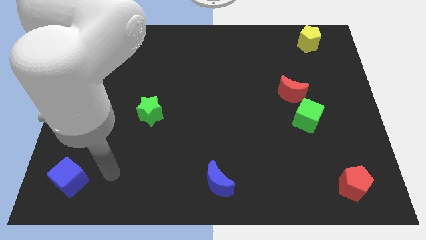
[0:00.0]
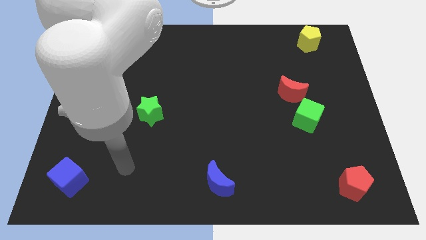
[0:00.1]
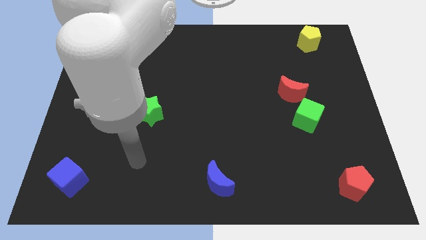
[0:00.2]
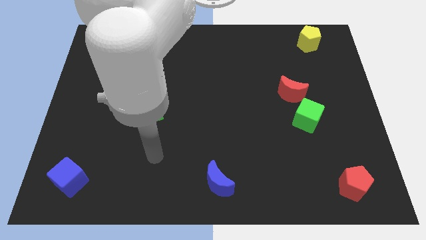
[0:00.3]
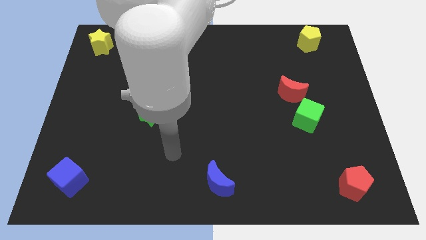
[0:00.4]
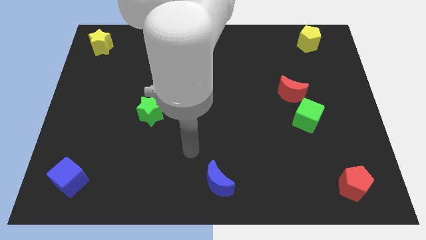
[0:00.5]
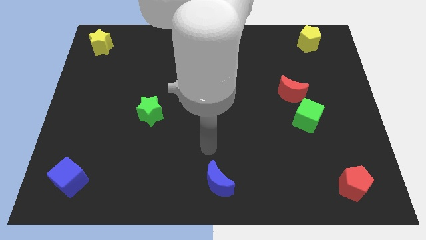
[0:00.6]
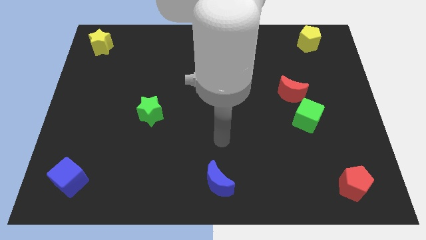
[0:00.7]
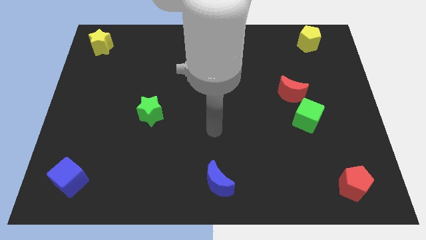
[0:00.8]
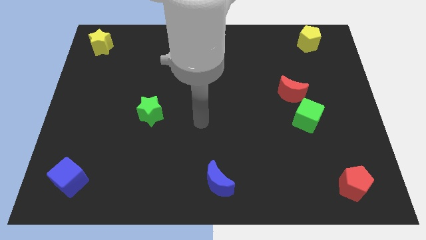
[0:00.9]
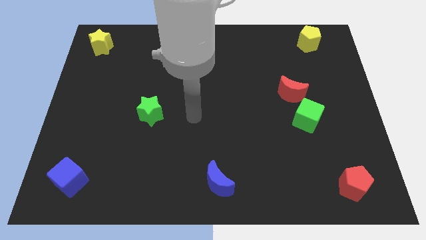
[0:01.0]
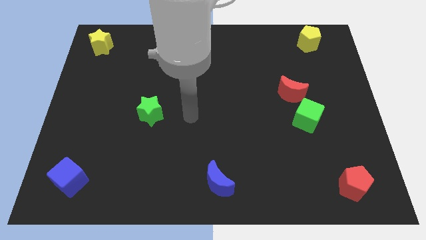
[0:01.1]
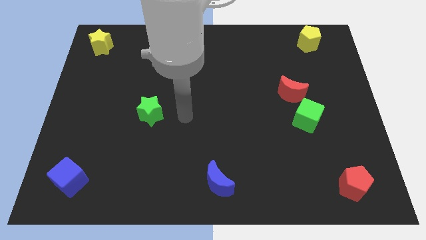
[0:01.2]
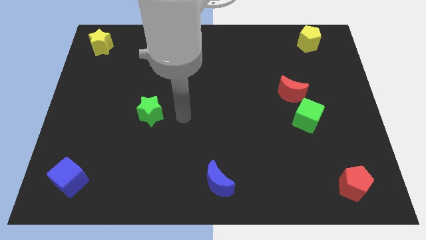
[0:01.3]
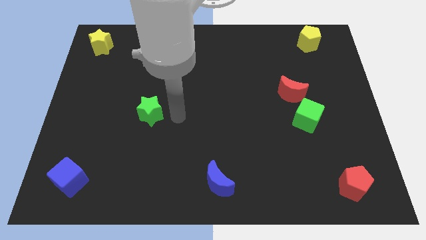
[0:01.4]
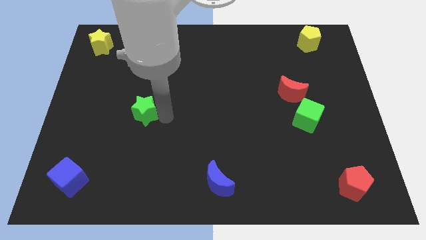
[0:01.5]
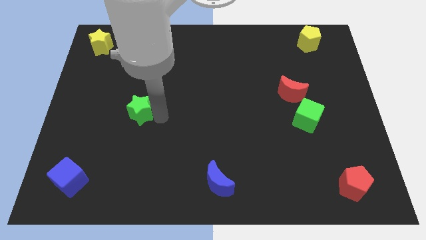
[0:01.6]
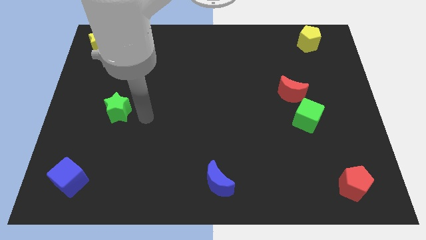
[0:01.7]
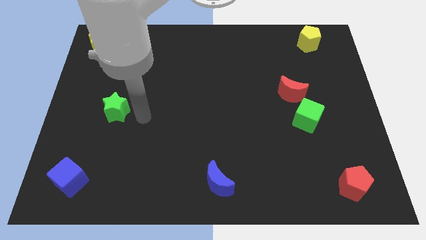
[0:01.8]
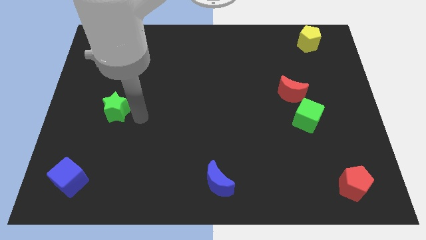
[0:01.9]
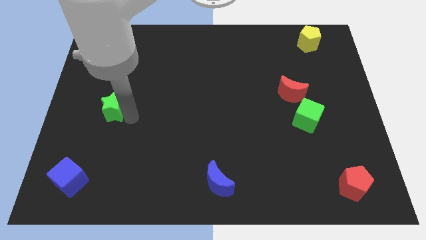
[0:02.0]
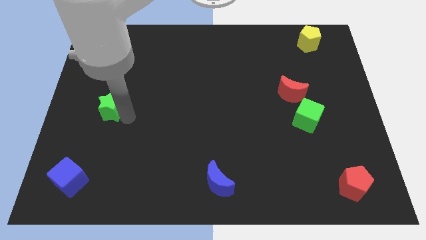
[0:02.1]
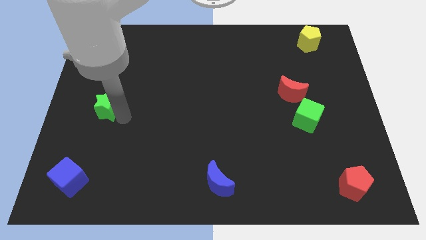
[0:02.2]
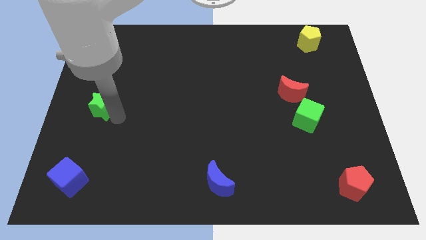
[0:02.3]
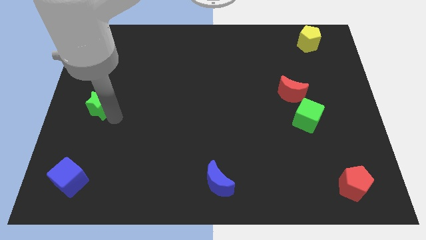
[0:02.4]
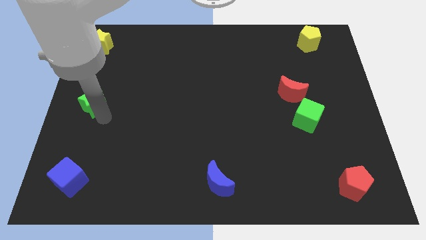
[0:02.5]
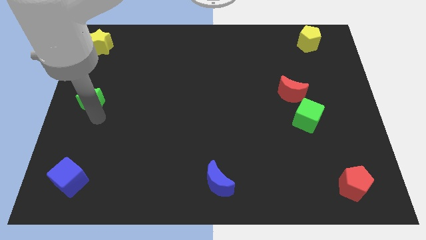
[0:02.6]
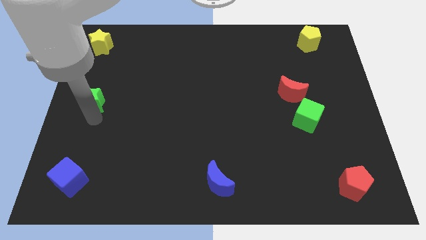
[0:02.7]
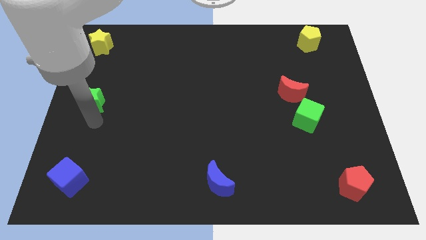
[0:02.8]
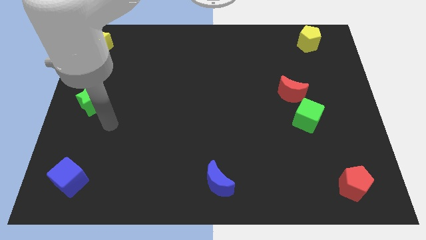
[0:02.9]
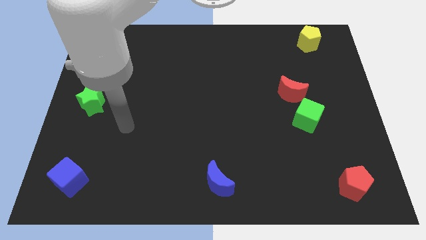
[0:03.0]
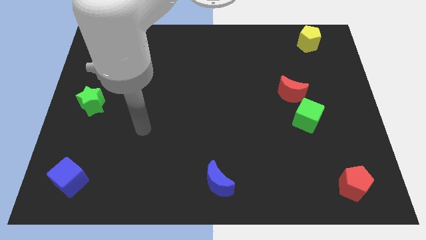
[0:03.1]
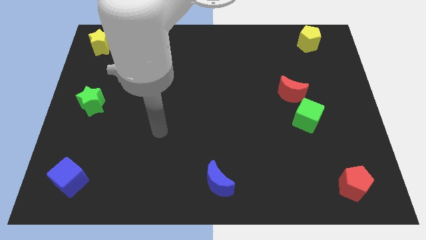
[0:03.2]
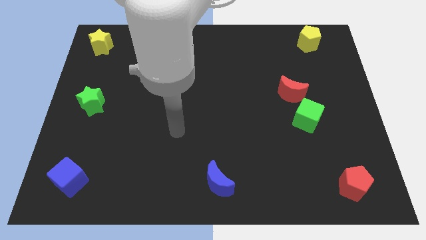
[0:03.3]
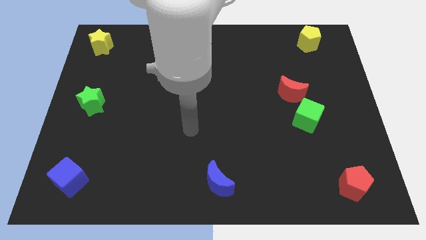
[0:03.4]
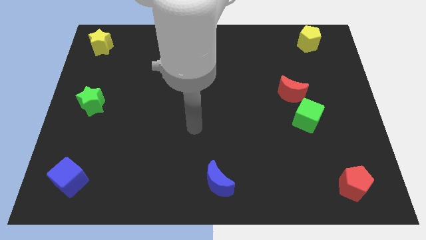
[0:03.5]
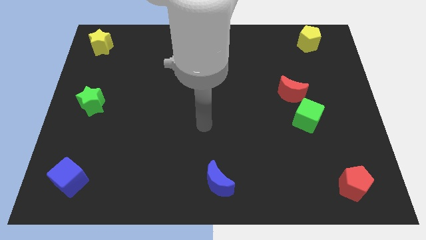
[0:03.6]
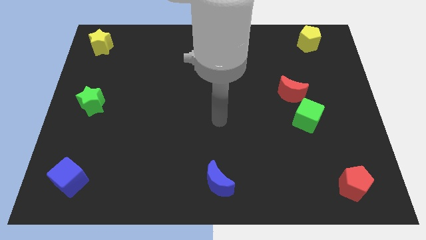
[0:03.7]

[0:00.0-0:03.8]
place the green star in between the blue cube and the yellow star to form a vertical line

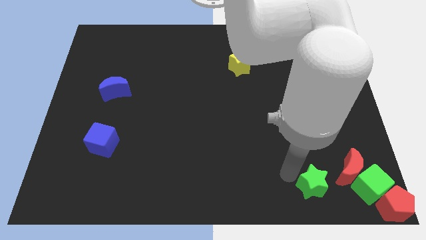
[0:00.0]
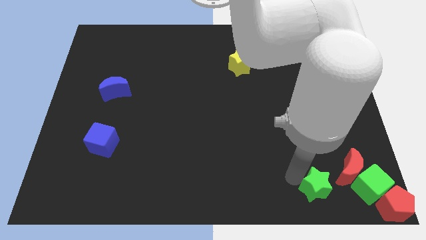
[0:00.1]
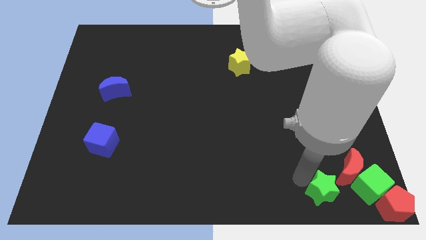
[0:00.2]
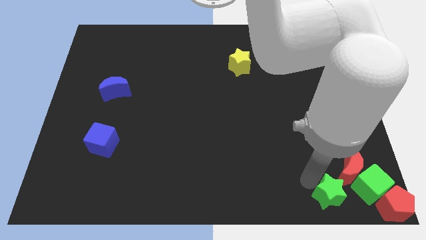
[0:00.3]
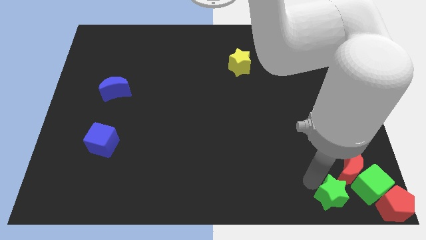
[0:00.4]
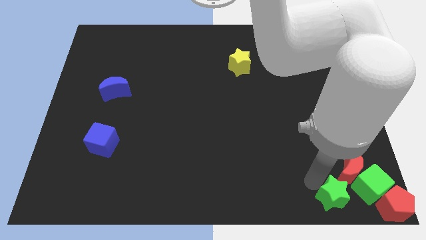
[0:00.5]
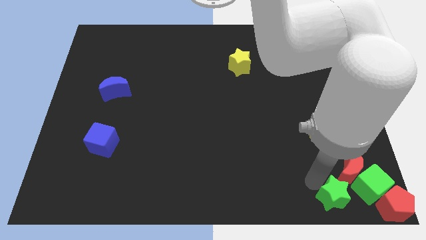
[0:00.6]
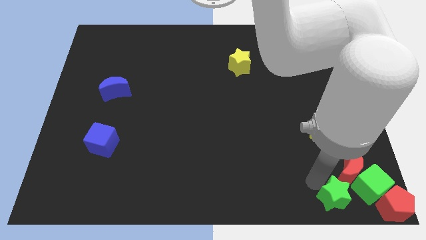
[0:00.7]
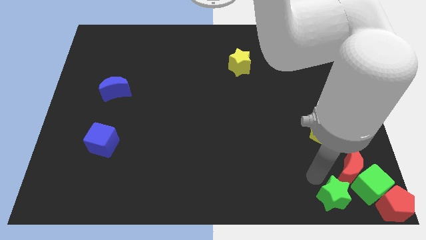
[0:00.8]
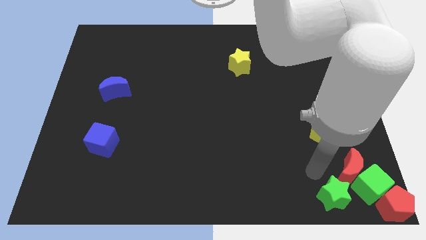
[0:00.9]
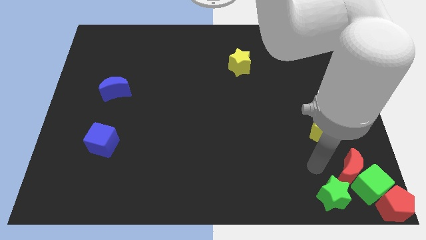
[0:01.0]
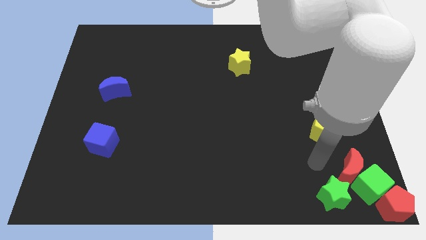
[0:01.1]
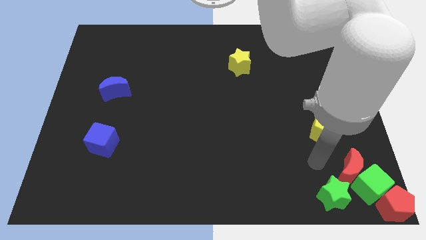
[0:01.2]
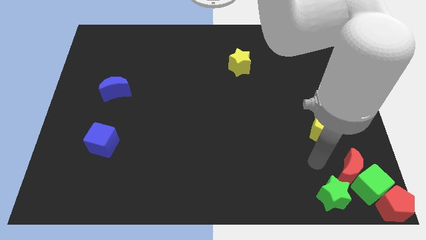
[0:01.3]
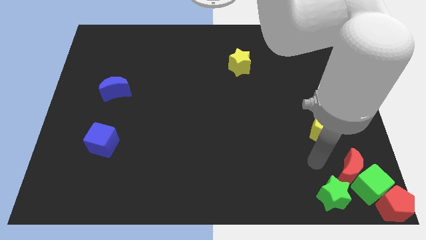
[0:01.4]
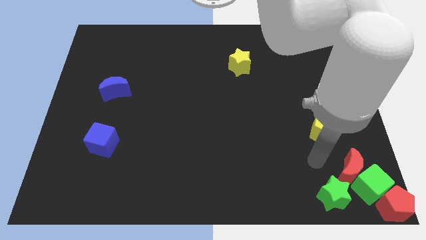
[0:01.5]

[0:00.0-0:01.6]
push the green star to the left of the green cube

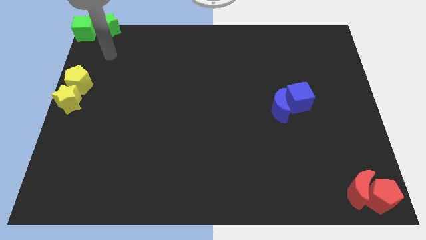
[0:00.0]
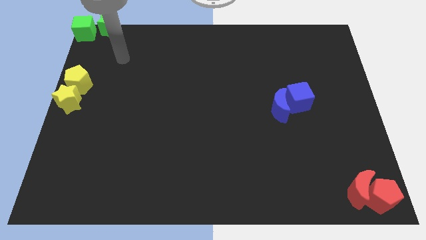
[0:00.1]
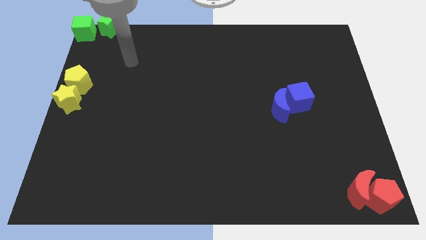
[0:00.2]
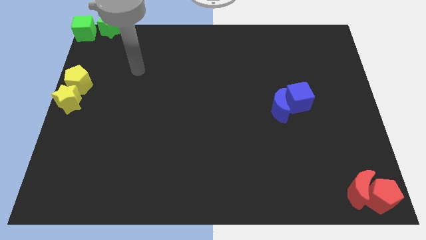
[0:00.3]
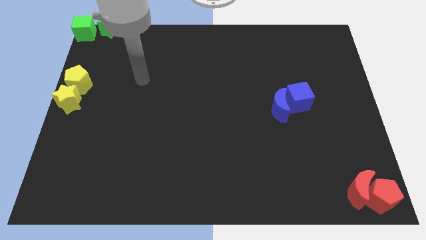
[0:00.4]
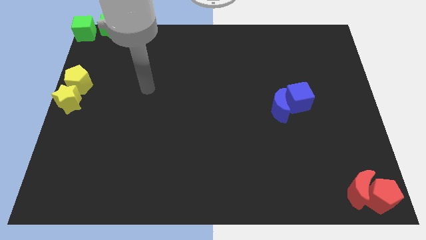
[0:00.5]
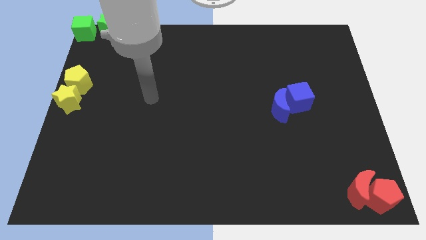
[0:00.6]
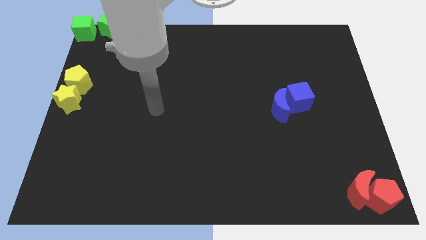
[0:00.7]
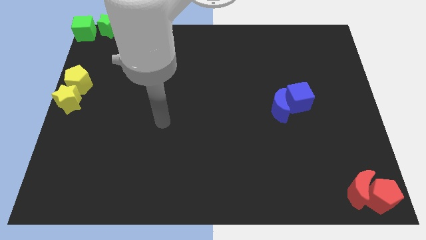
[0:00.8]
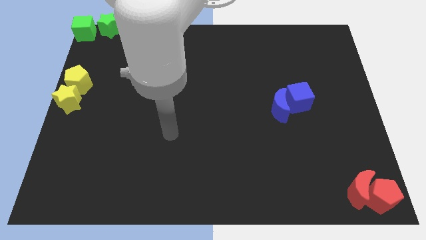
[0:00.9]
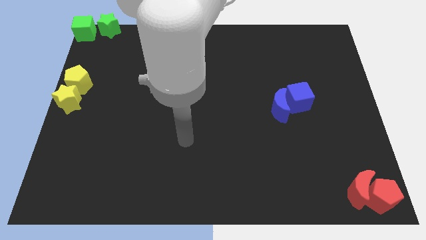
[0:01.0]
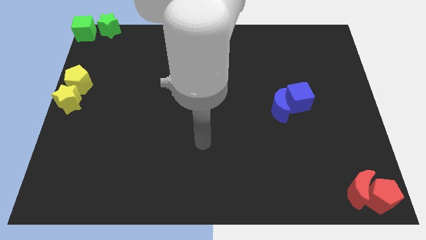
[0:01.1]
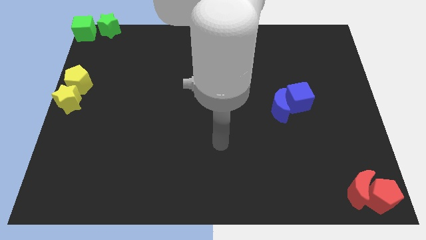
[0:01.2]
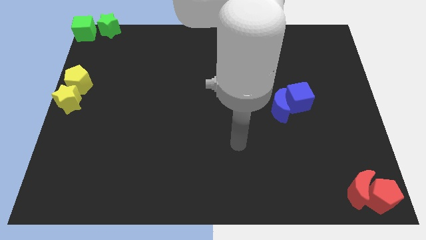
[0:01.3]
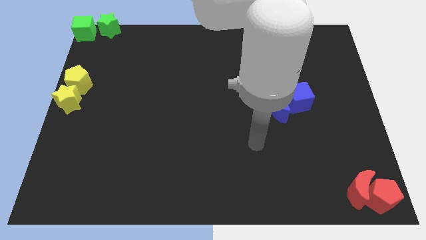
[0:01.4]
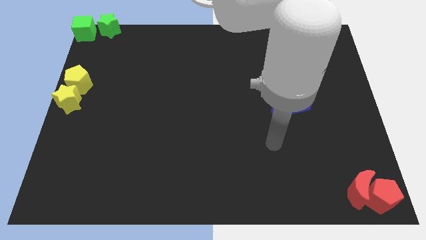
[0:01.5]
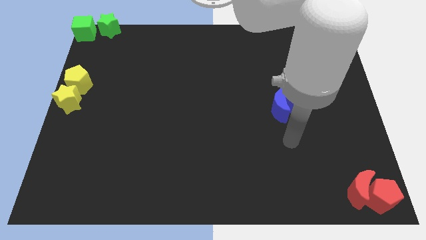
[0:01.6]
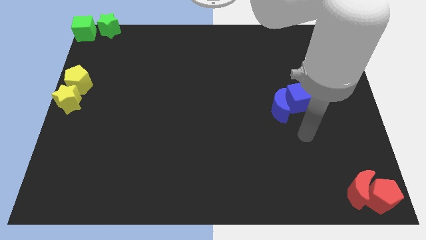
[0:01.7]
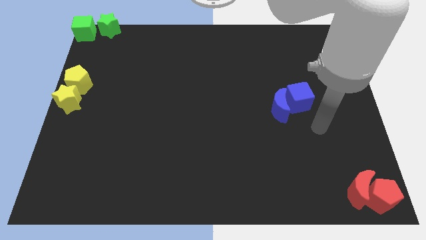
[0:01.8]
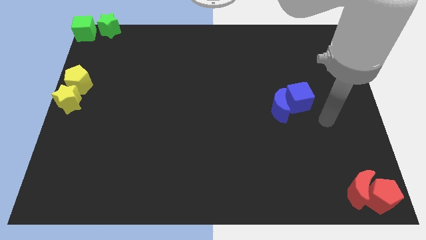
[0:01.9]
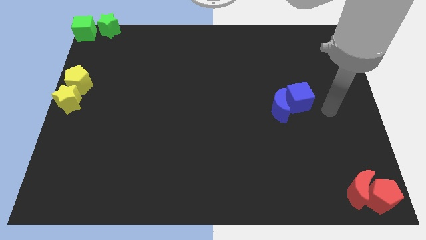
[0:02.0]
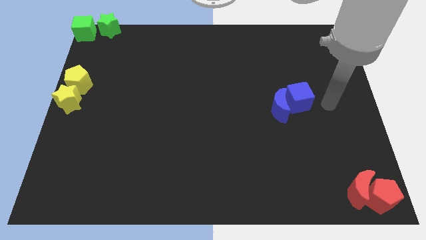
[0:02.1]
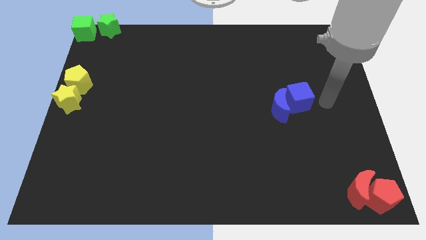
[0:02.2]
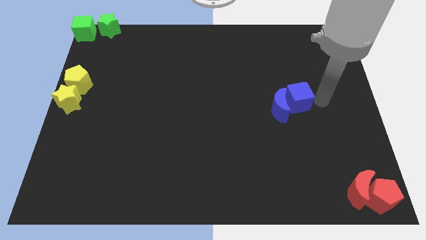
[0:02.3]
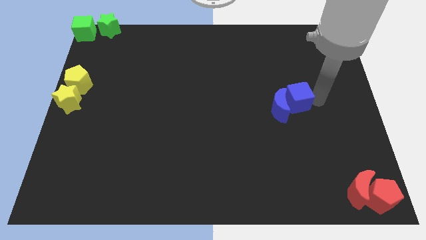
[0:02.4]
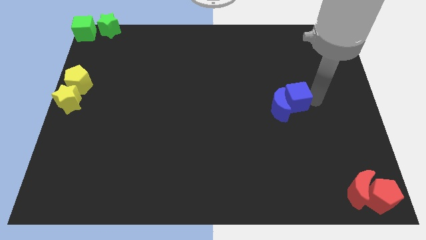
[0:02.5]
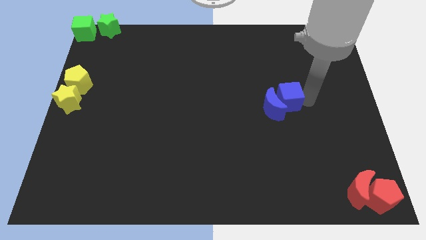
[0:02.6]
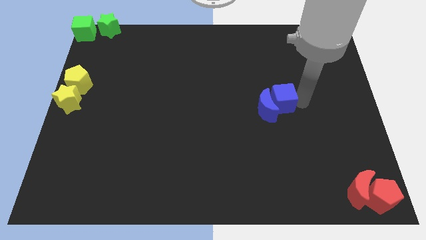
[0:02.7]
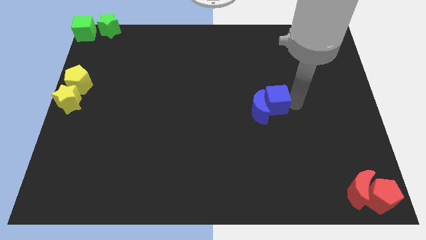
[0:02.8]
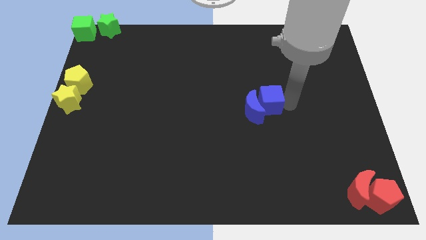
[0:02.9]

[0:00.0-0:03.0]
go and push the group of blue blocks slightly towards the center of the board

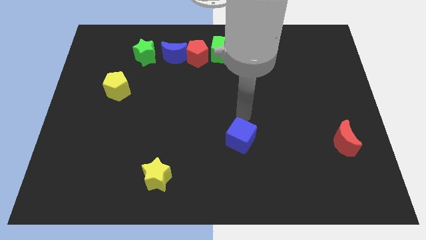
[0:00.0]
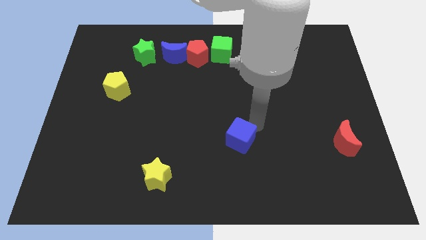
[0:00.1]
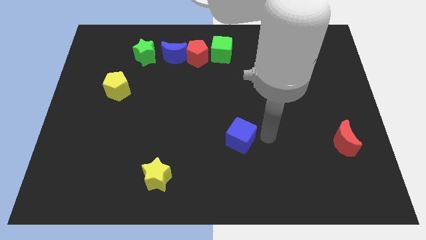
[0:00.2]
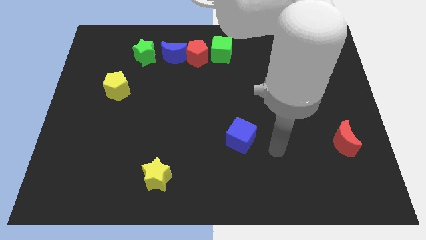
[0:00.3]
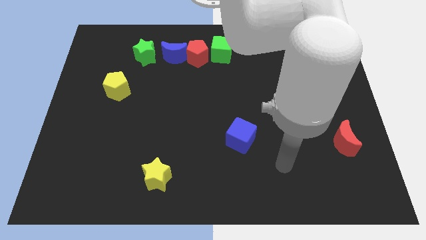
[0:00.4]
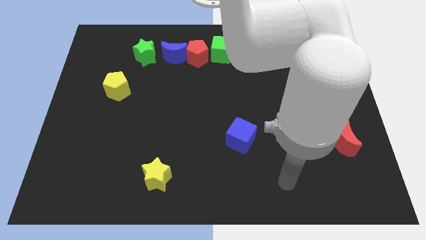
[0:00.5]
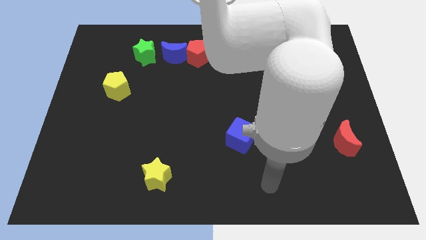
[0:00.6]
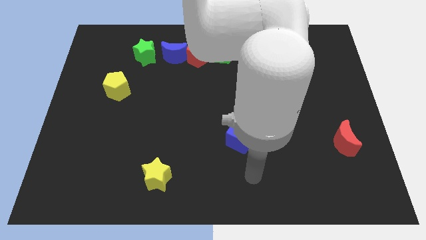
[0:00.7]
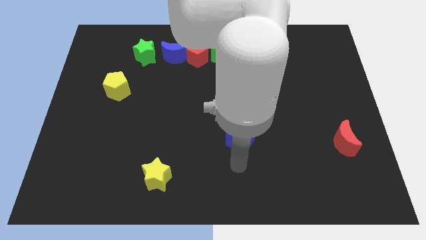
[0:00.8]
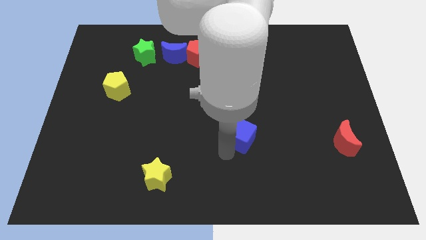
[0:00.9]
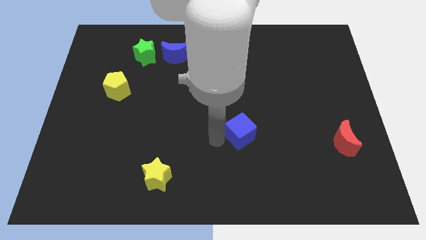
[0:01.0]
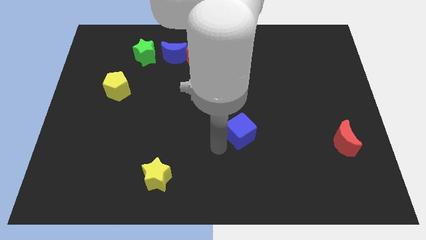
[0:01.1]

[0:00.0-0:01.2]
slightly move the blue cube diagonal to the left of the red crescent
